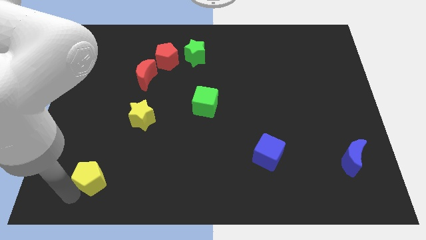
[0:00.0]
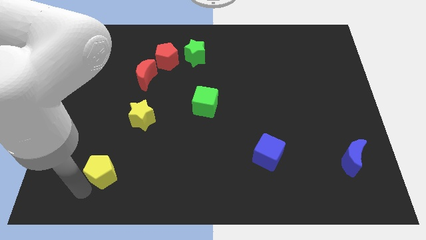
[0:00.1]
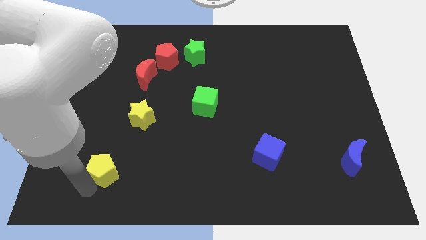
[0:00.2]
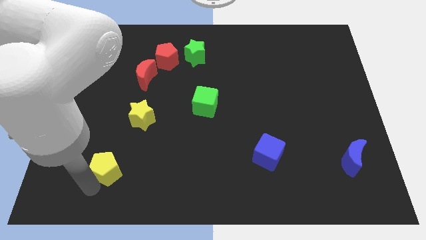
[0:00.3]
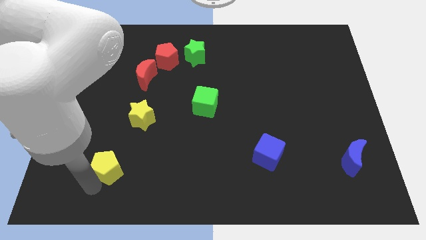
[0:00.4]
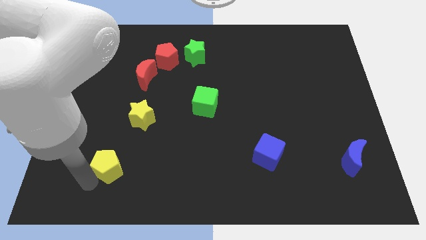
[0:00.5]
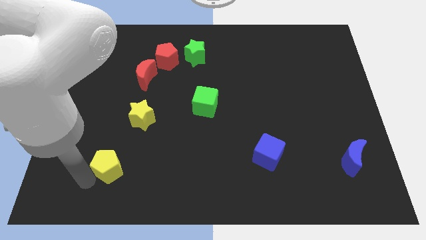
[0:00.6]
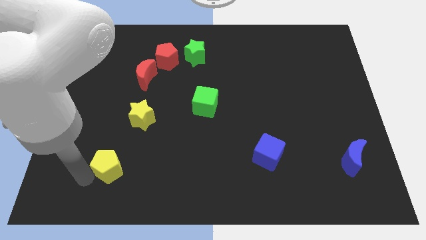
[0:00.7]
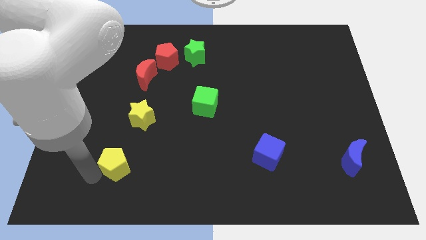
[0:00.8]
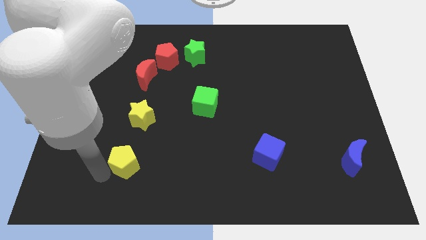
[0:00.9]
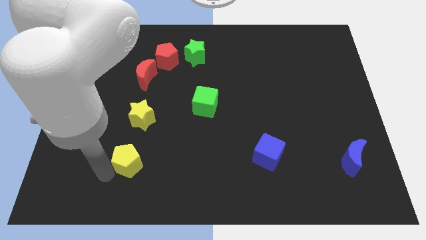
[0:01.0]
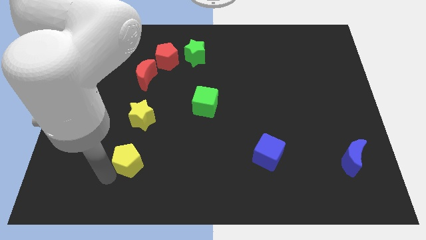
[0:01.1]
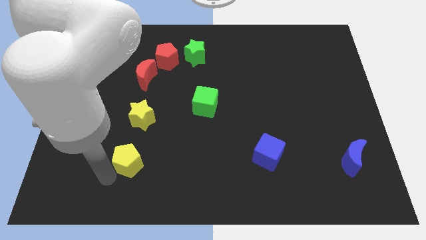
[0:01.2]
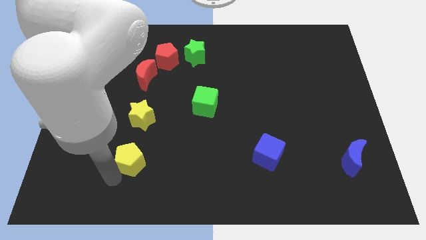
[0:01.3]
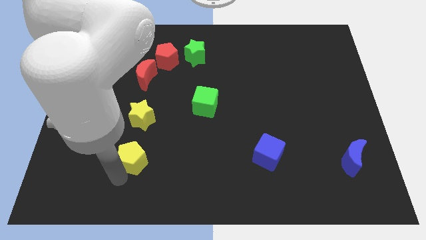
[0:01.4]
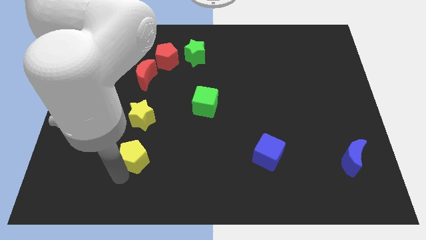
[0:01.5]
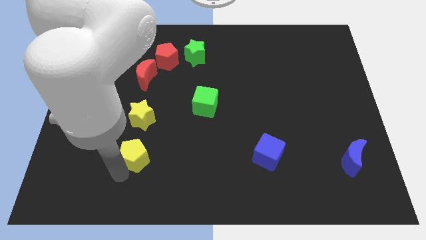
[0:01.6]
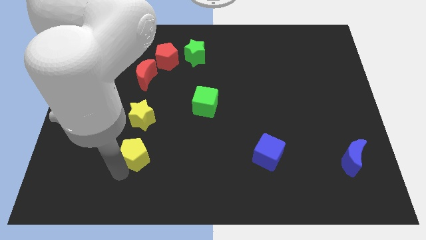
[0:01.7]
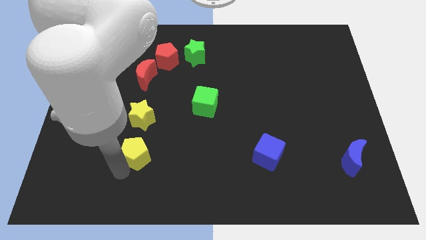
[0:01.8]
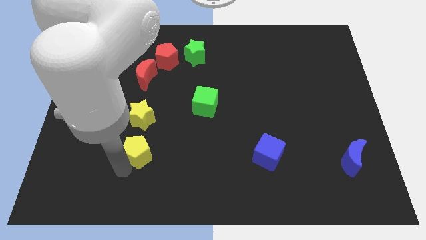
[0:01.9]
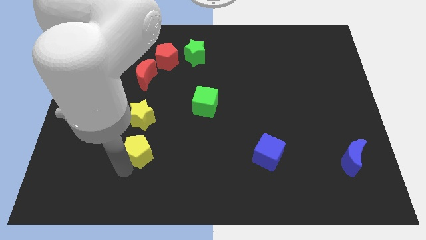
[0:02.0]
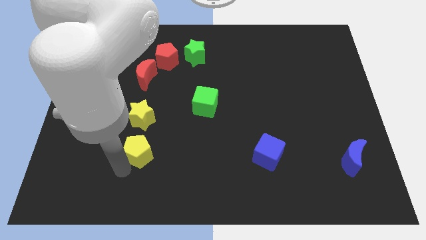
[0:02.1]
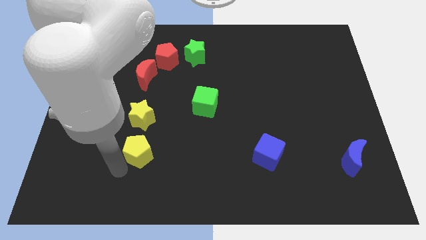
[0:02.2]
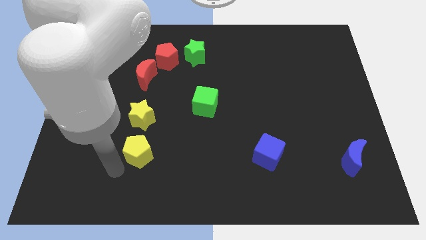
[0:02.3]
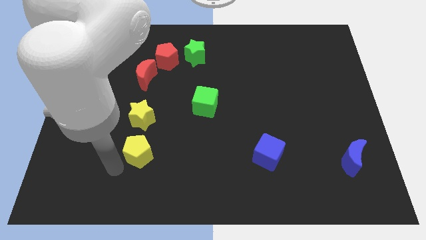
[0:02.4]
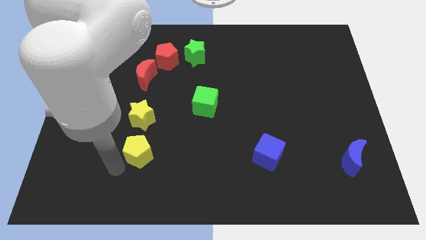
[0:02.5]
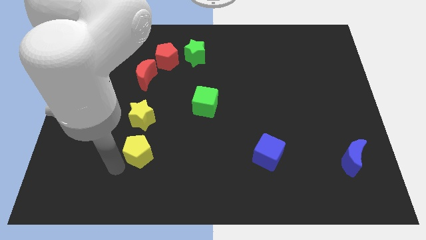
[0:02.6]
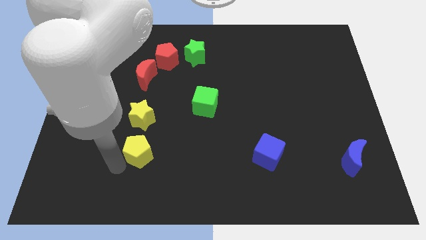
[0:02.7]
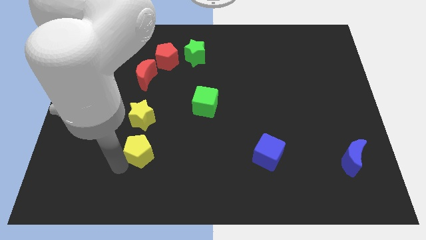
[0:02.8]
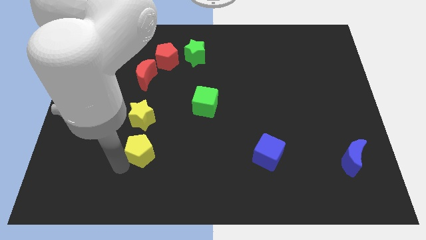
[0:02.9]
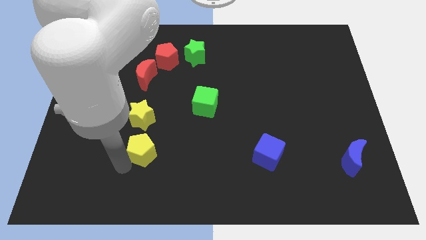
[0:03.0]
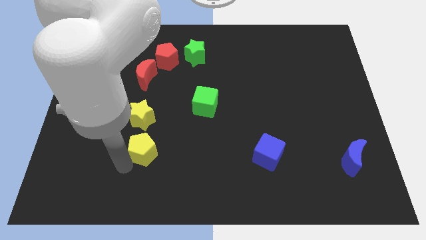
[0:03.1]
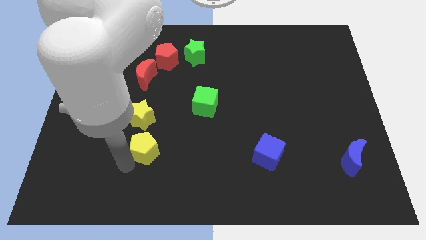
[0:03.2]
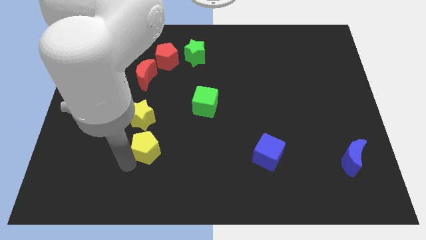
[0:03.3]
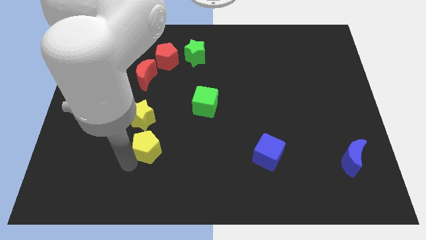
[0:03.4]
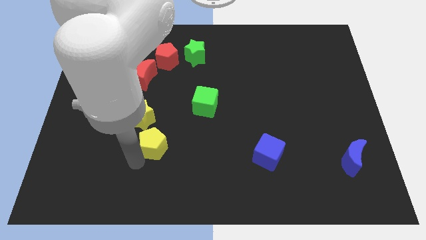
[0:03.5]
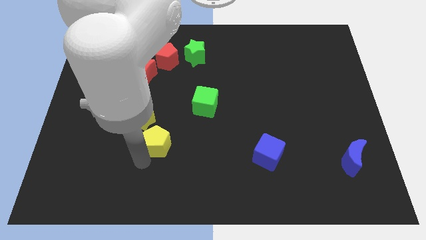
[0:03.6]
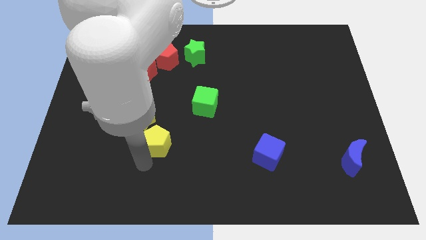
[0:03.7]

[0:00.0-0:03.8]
place the yellow pentagon diagonal below the yellow star

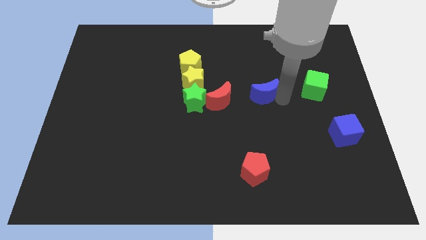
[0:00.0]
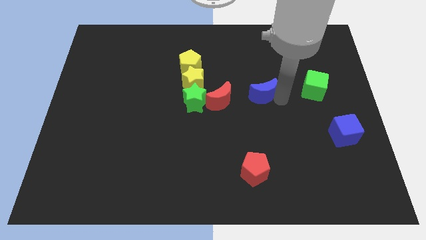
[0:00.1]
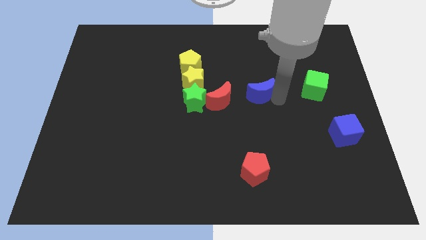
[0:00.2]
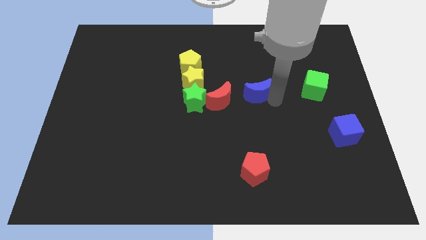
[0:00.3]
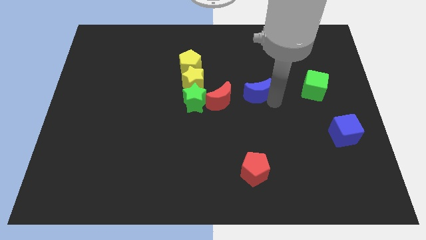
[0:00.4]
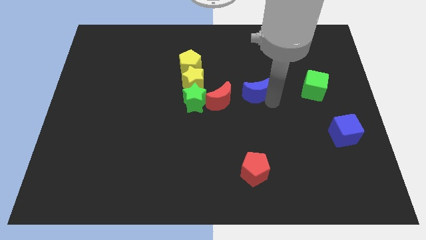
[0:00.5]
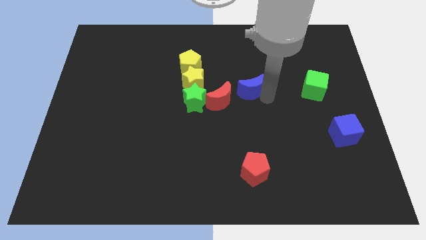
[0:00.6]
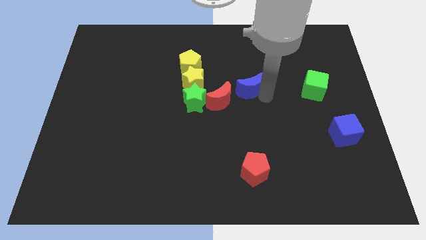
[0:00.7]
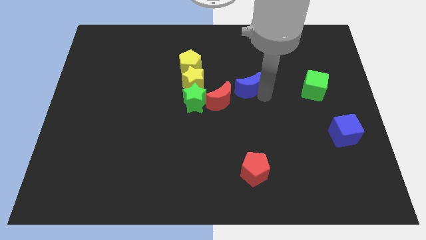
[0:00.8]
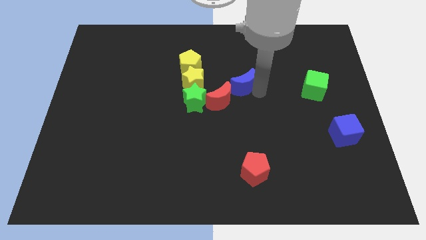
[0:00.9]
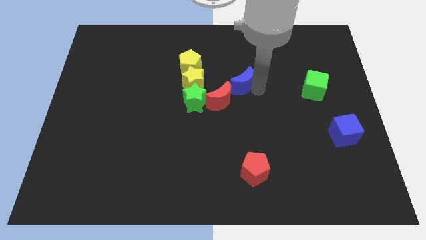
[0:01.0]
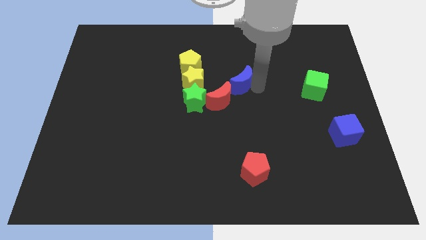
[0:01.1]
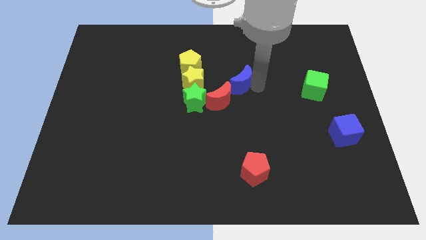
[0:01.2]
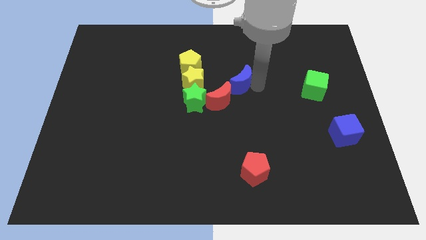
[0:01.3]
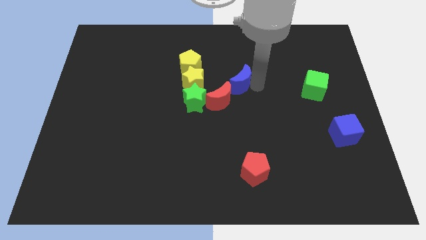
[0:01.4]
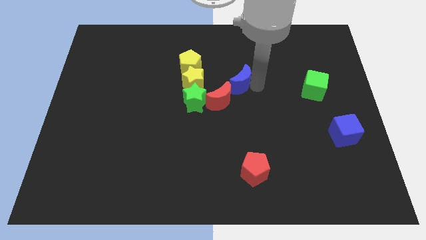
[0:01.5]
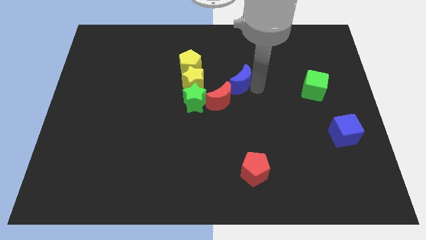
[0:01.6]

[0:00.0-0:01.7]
place the blue moon right to the yellow star

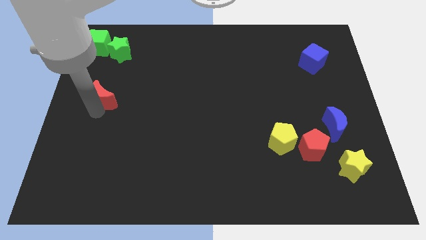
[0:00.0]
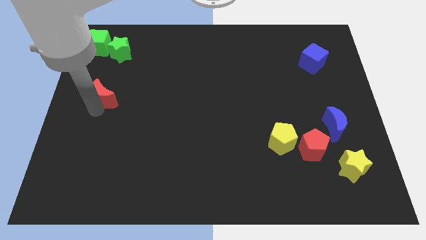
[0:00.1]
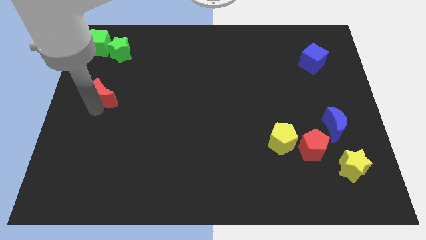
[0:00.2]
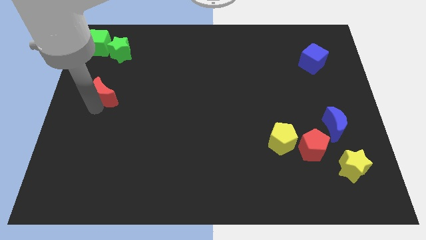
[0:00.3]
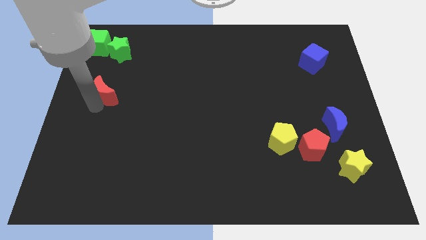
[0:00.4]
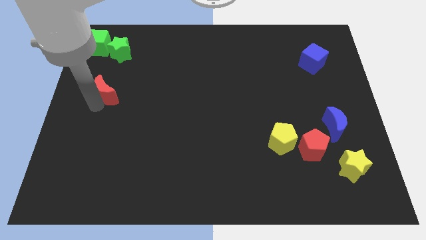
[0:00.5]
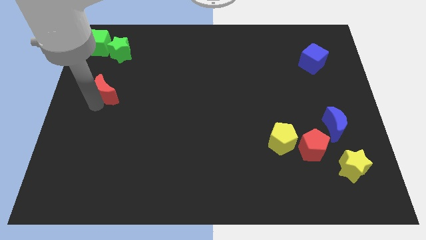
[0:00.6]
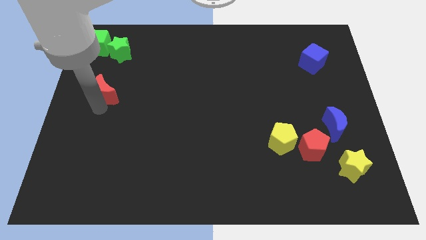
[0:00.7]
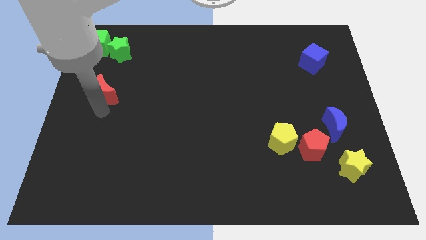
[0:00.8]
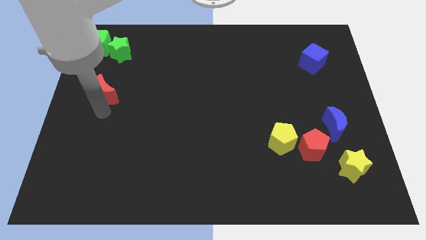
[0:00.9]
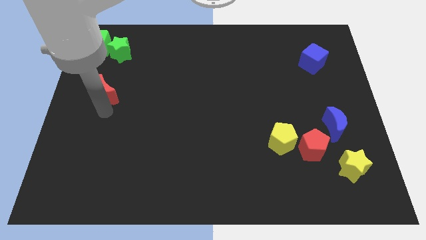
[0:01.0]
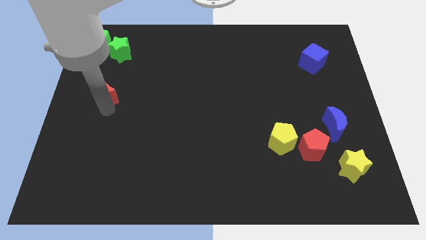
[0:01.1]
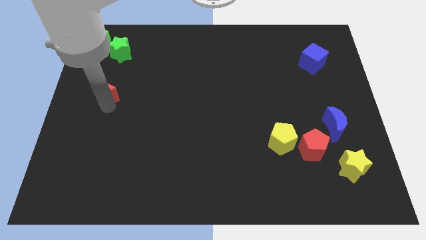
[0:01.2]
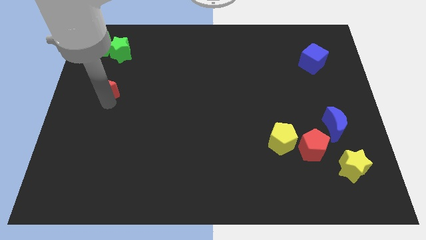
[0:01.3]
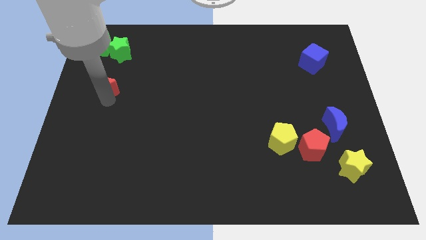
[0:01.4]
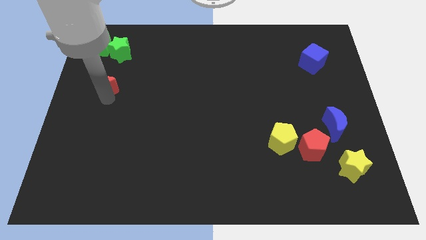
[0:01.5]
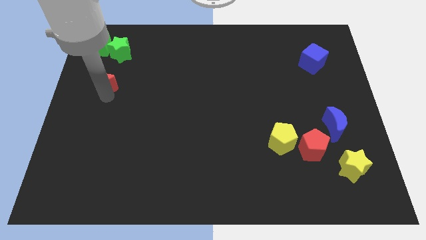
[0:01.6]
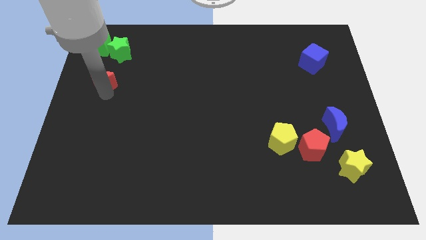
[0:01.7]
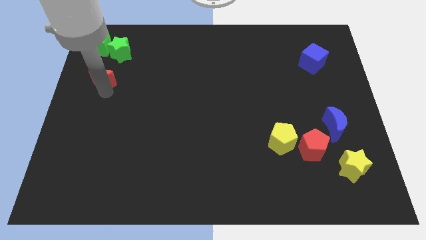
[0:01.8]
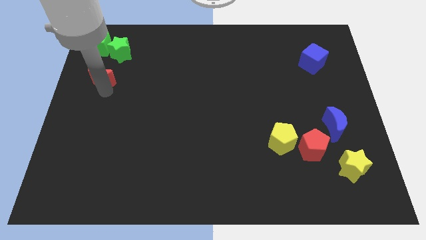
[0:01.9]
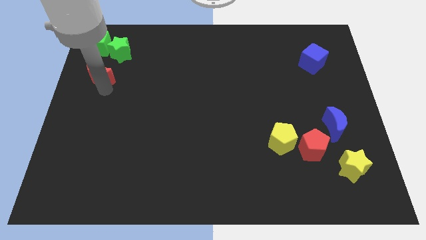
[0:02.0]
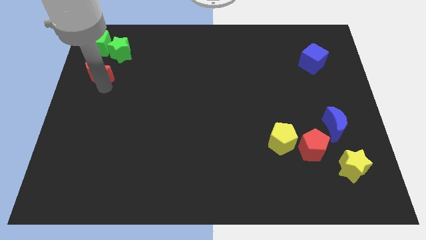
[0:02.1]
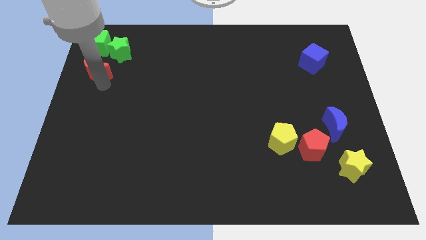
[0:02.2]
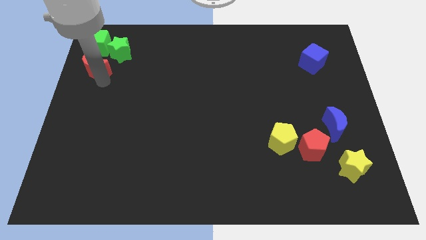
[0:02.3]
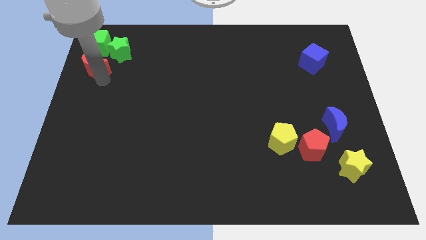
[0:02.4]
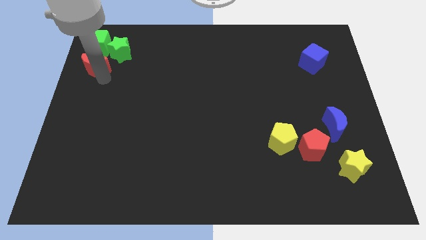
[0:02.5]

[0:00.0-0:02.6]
move the red moon close to the green cube

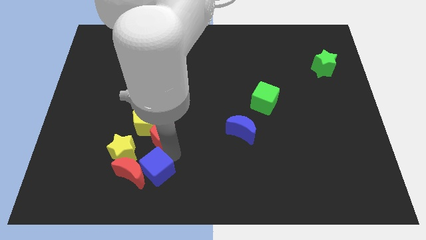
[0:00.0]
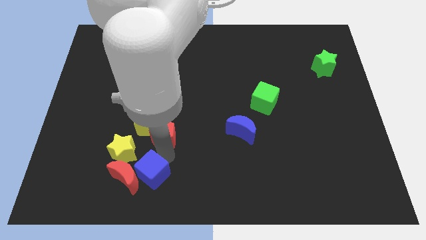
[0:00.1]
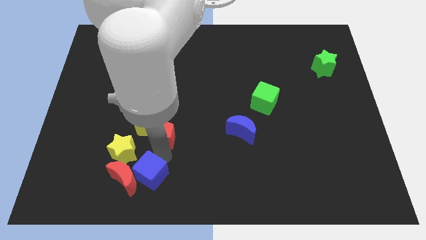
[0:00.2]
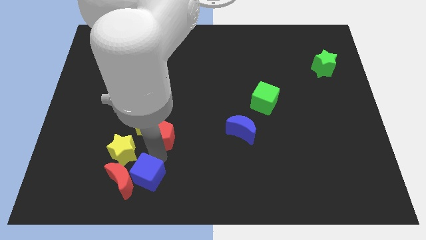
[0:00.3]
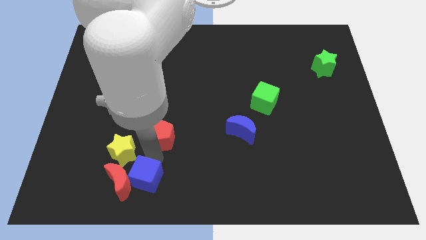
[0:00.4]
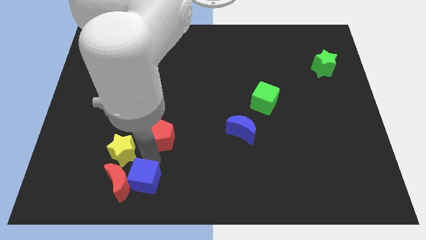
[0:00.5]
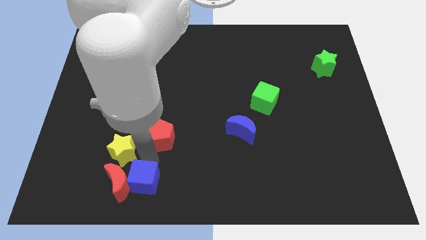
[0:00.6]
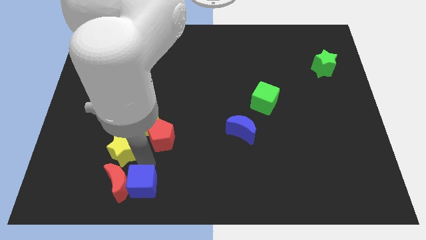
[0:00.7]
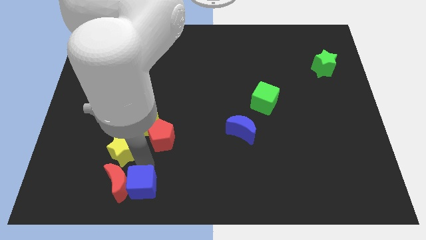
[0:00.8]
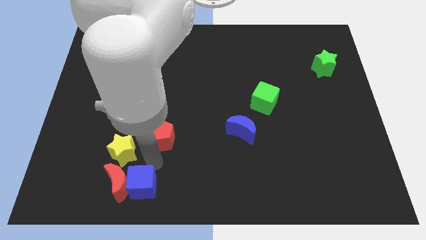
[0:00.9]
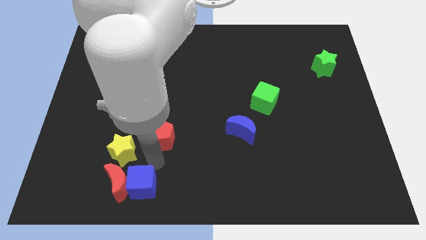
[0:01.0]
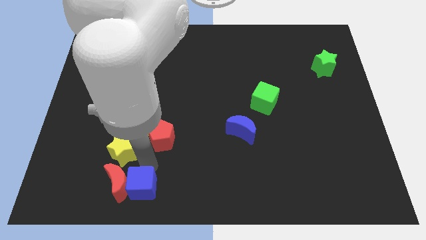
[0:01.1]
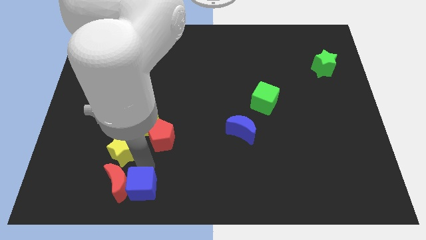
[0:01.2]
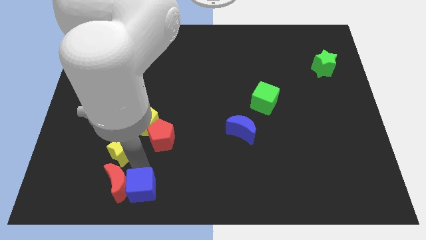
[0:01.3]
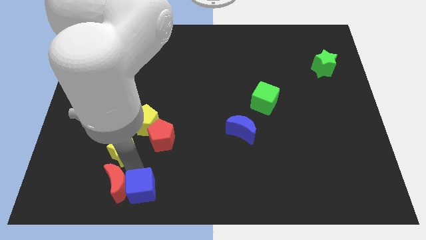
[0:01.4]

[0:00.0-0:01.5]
reposition the blue cube
